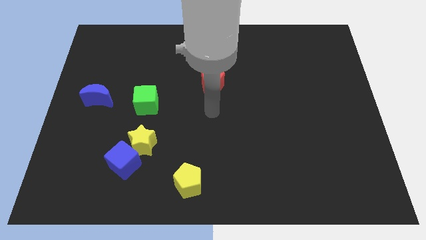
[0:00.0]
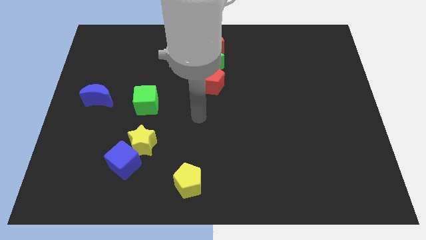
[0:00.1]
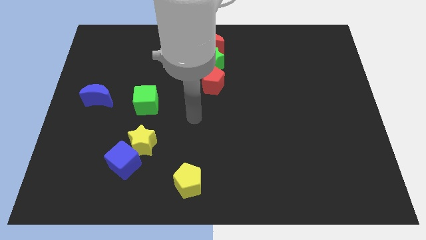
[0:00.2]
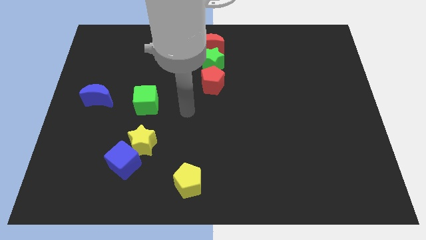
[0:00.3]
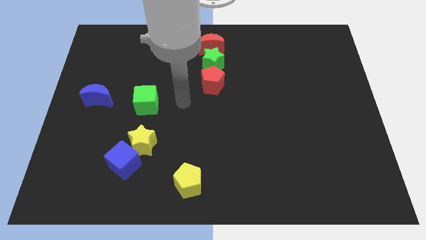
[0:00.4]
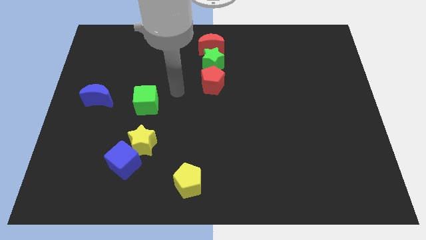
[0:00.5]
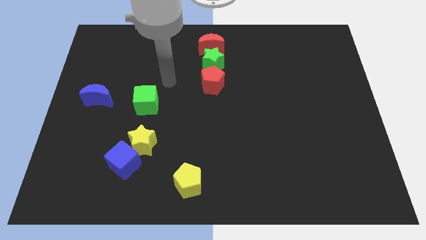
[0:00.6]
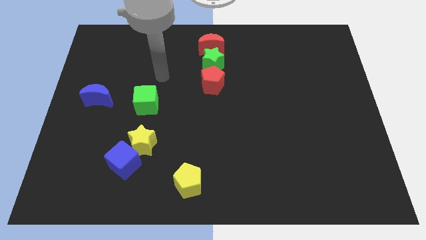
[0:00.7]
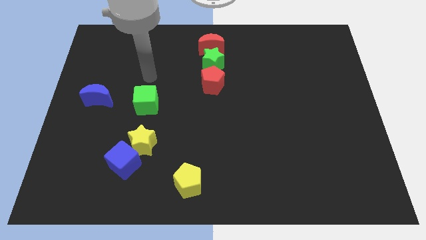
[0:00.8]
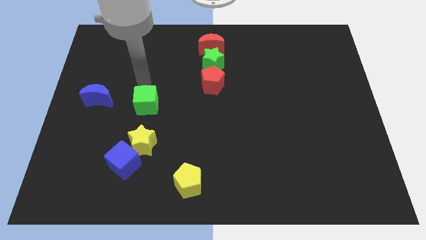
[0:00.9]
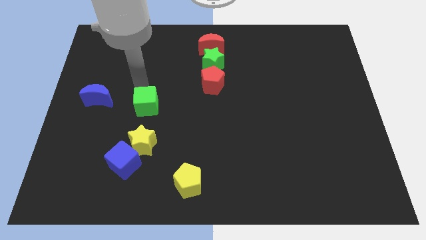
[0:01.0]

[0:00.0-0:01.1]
point your arm at the top of the green cube

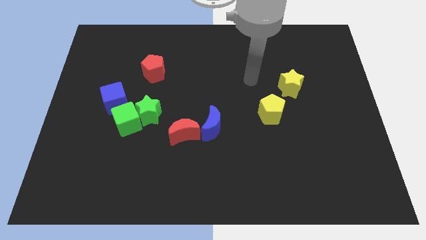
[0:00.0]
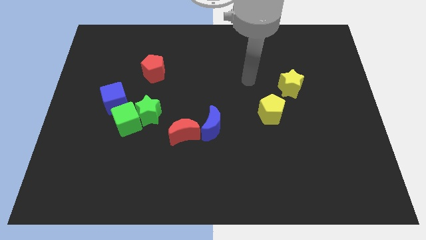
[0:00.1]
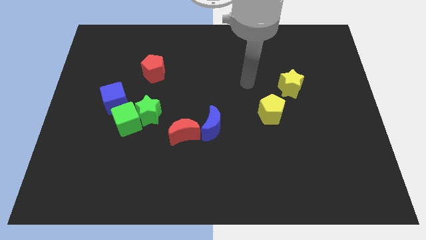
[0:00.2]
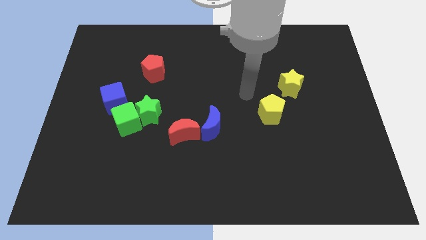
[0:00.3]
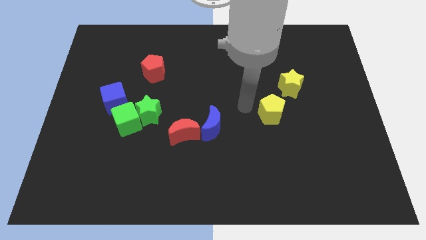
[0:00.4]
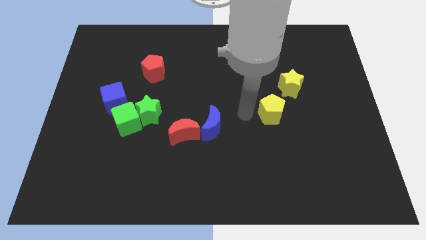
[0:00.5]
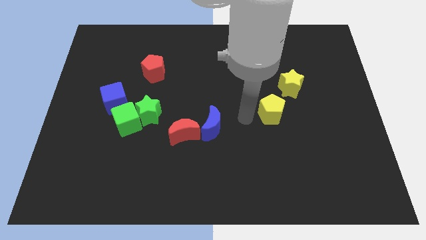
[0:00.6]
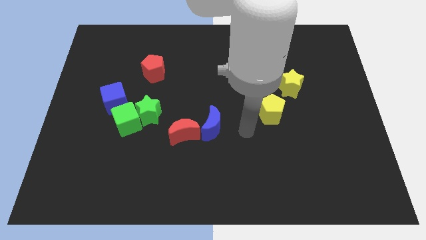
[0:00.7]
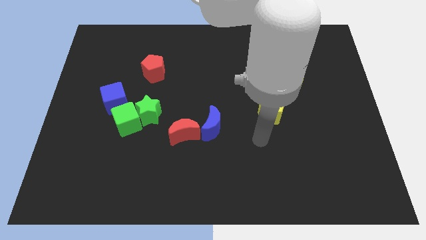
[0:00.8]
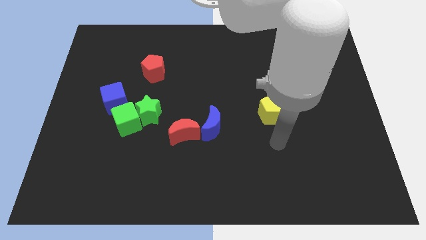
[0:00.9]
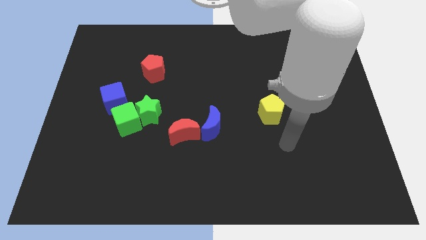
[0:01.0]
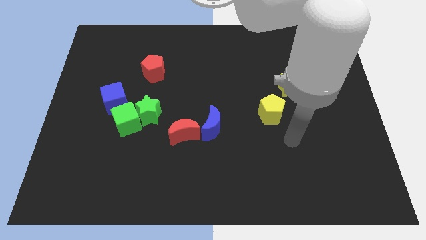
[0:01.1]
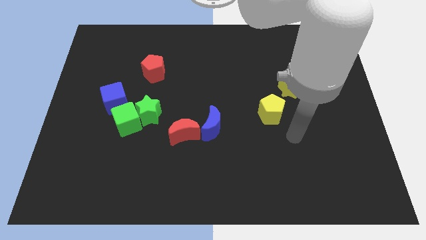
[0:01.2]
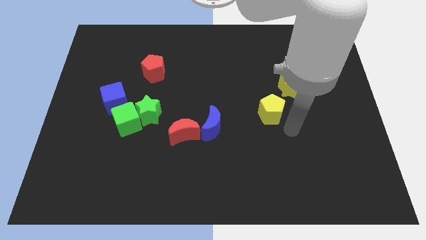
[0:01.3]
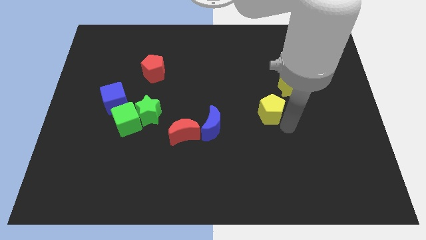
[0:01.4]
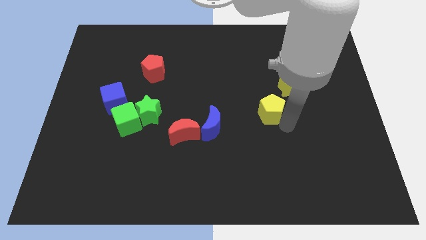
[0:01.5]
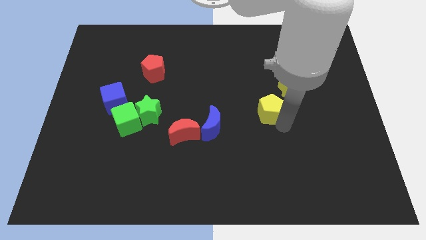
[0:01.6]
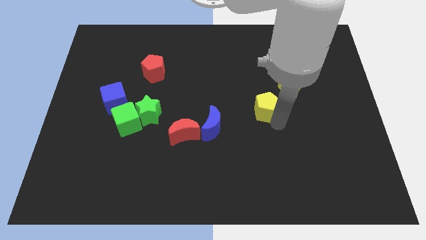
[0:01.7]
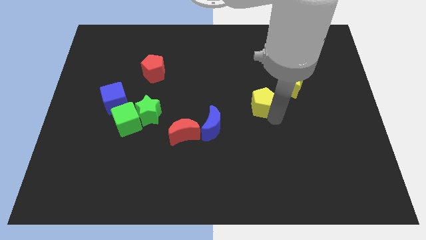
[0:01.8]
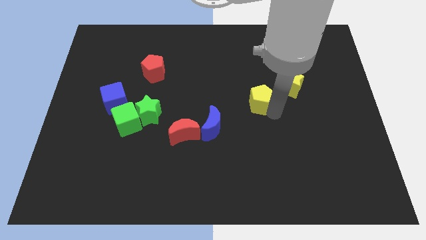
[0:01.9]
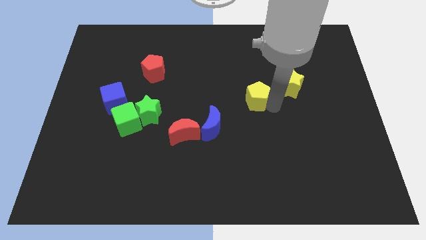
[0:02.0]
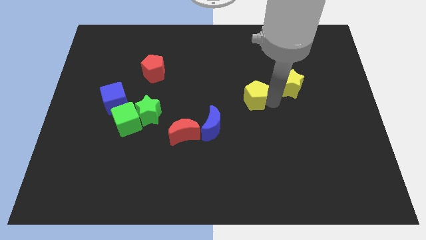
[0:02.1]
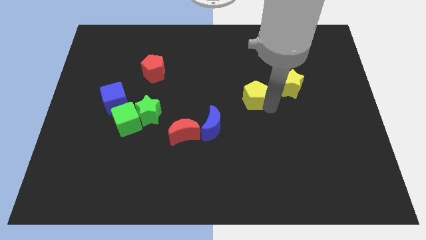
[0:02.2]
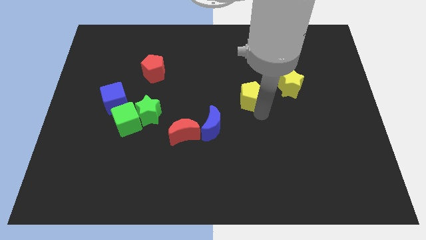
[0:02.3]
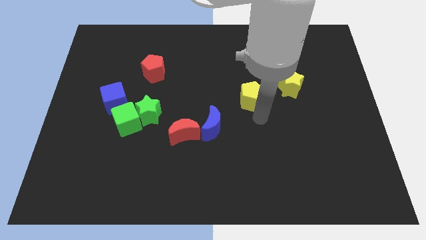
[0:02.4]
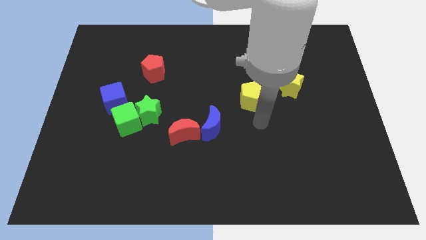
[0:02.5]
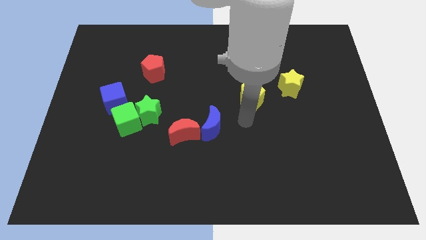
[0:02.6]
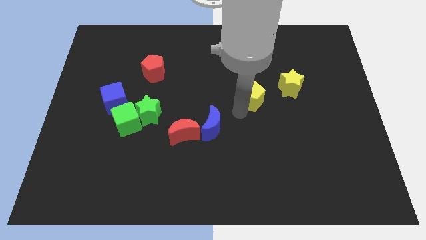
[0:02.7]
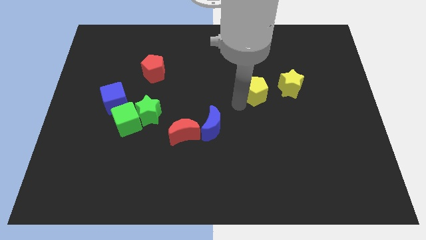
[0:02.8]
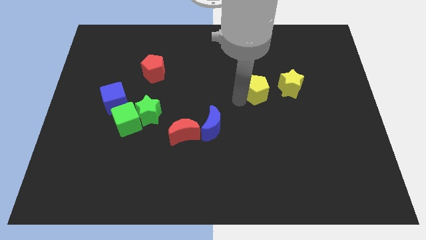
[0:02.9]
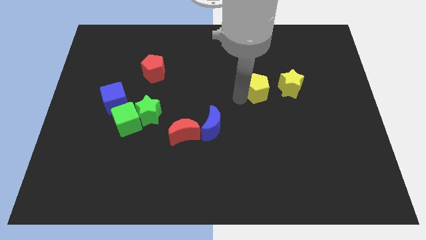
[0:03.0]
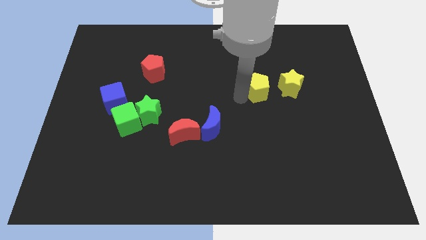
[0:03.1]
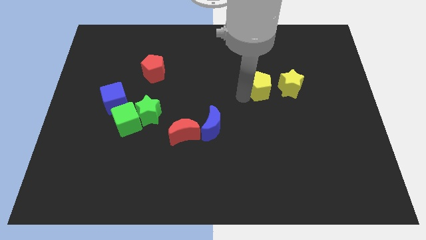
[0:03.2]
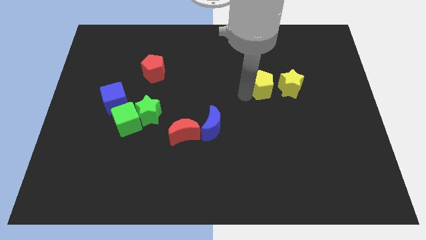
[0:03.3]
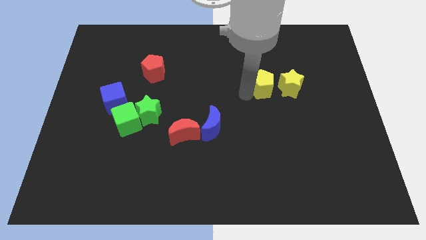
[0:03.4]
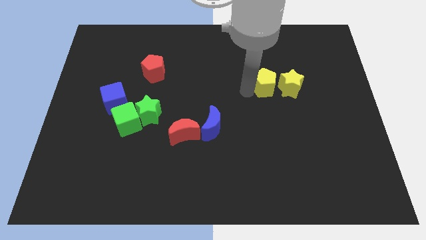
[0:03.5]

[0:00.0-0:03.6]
place yellow pentagon to the left of yellow star

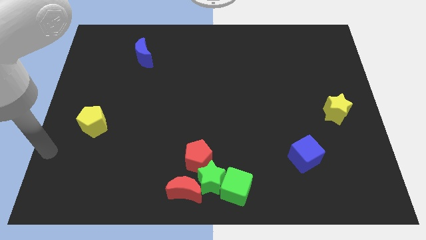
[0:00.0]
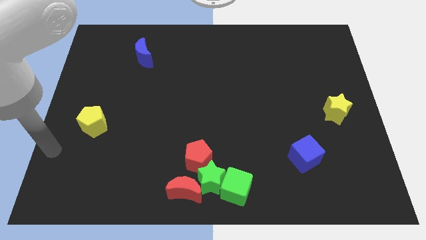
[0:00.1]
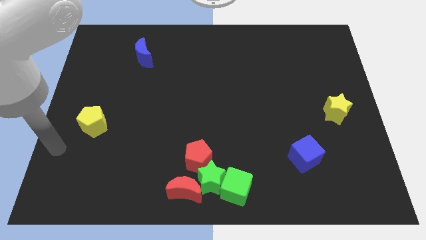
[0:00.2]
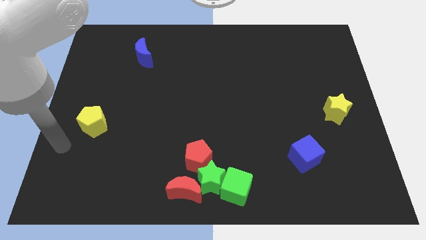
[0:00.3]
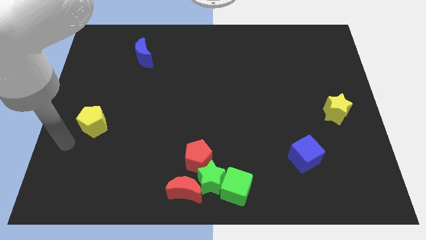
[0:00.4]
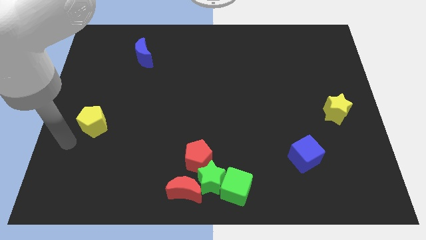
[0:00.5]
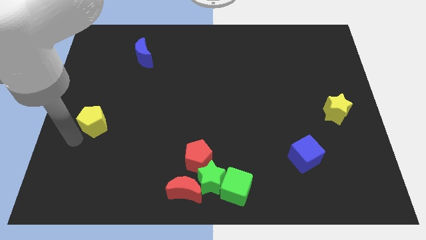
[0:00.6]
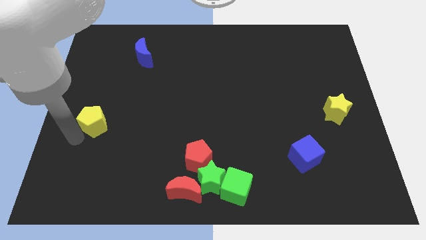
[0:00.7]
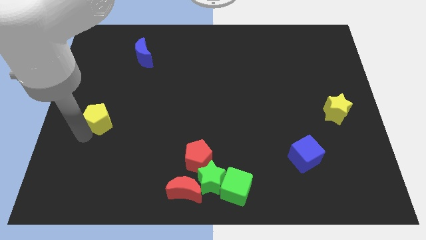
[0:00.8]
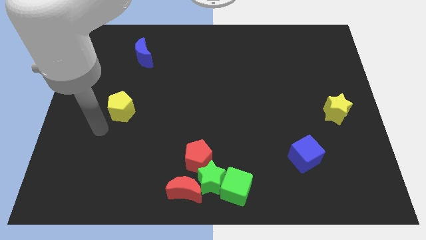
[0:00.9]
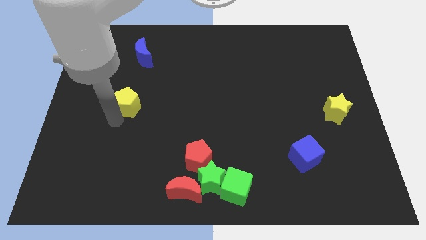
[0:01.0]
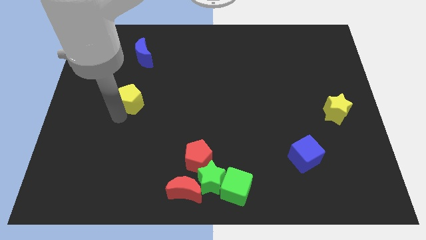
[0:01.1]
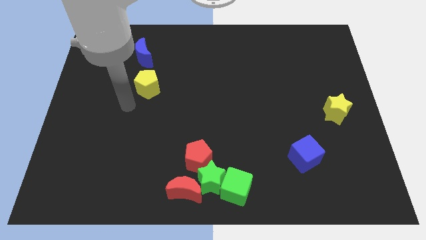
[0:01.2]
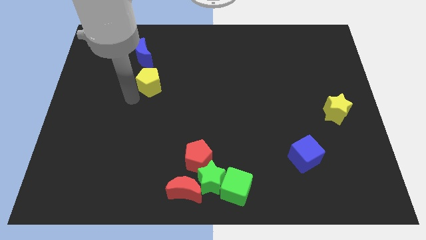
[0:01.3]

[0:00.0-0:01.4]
put the yellow pentagon below the blue moon

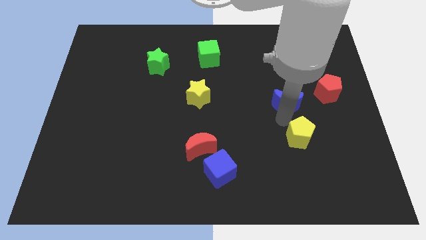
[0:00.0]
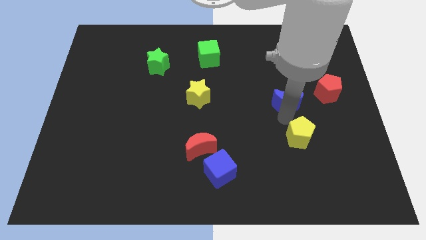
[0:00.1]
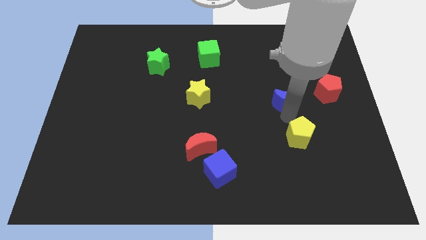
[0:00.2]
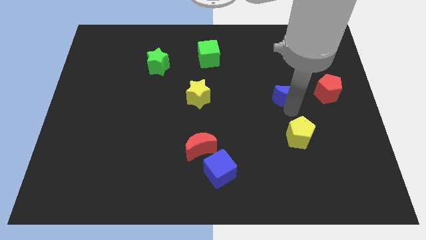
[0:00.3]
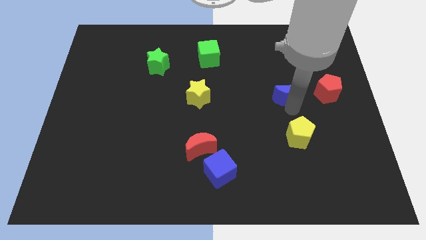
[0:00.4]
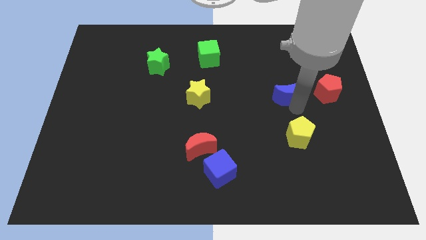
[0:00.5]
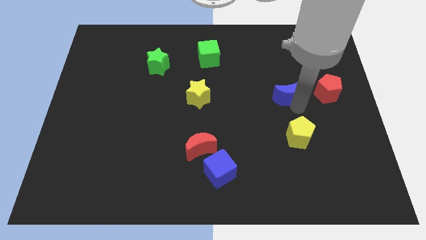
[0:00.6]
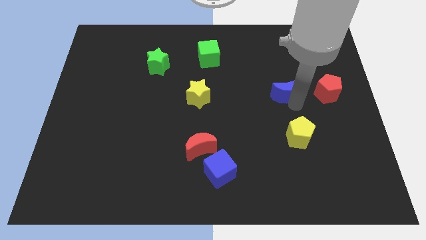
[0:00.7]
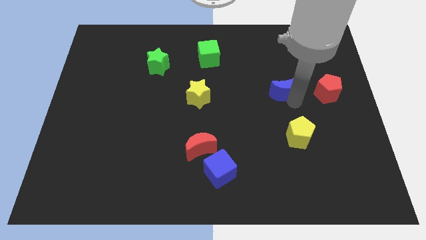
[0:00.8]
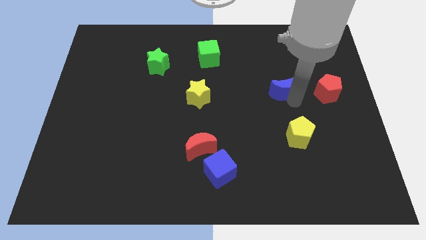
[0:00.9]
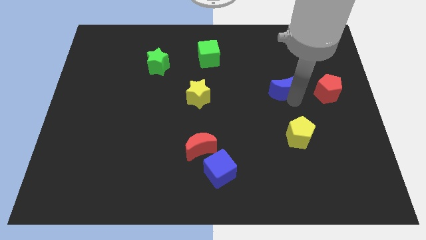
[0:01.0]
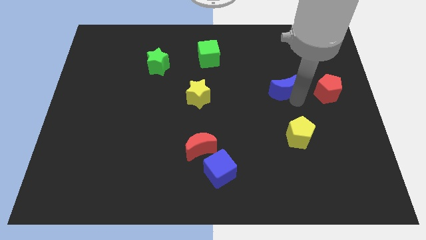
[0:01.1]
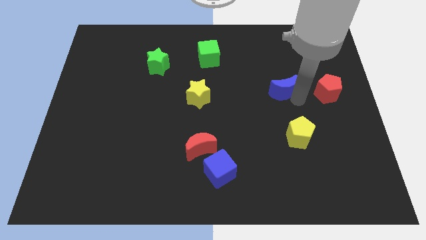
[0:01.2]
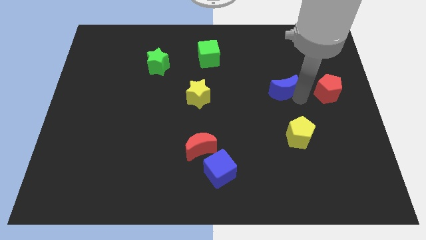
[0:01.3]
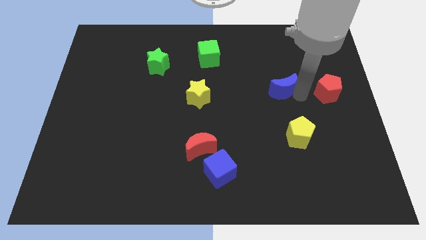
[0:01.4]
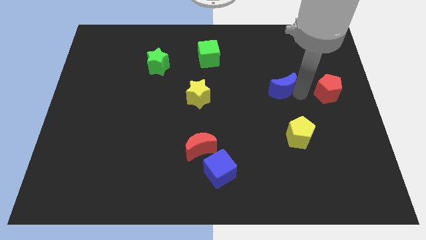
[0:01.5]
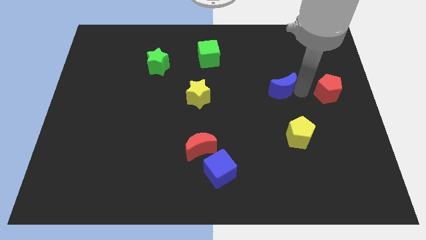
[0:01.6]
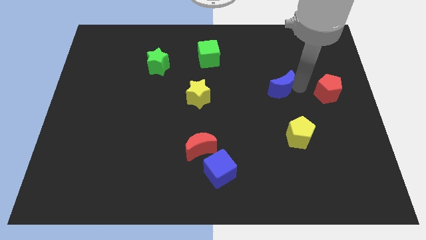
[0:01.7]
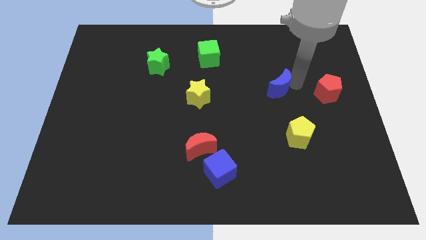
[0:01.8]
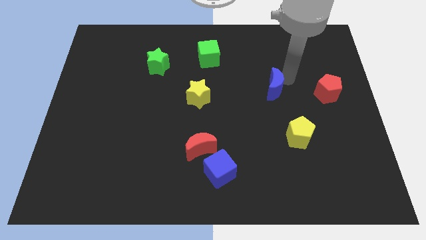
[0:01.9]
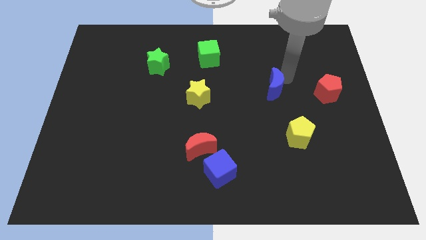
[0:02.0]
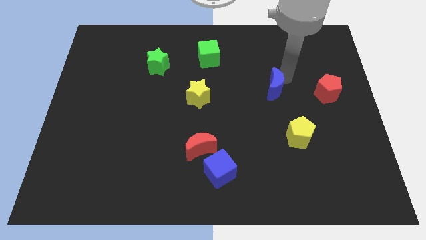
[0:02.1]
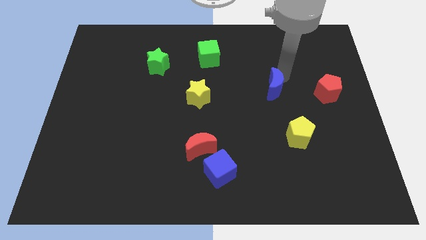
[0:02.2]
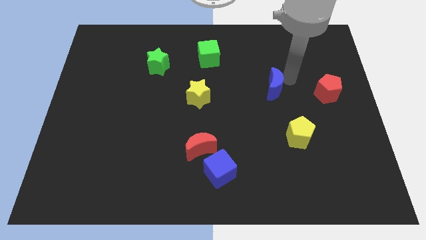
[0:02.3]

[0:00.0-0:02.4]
place the blue moon left to the red pentagon

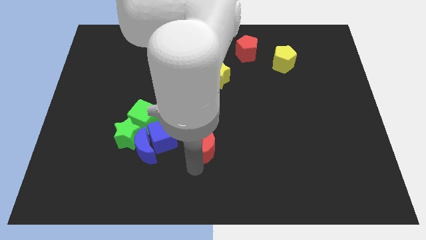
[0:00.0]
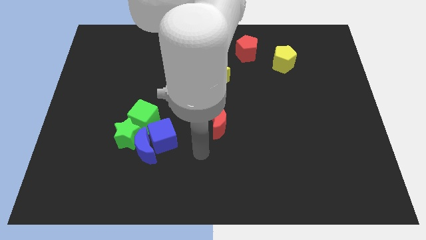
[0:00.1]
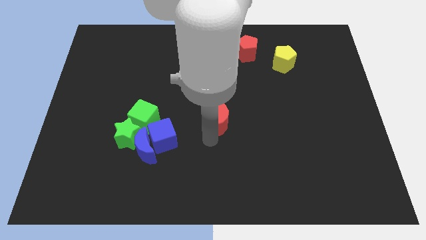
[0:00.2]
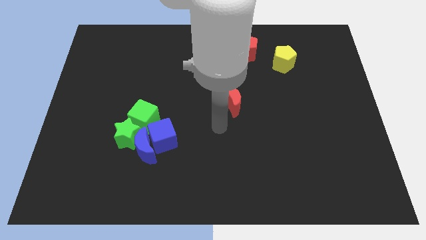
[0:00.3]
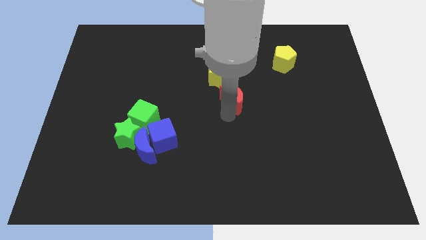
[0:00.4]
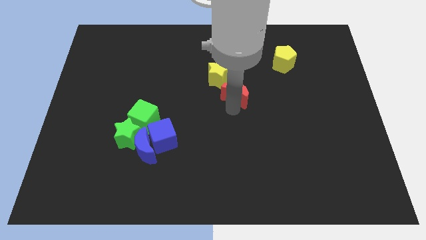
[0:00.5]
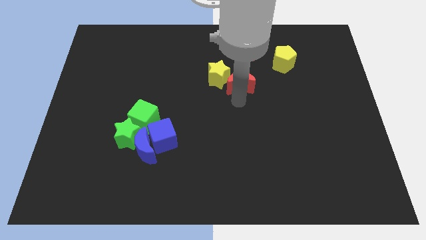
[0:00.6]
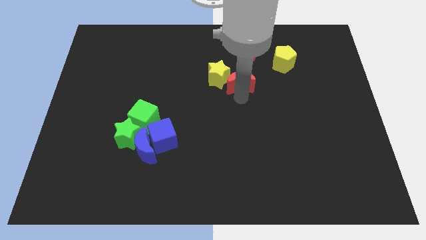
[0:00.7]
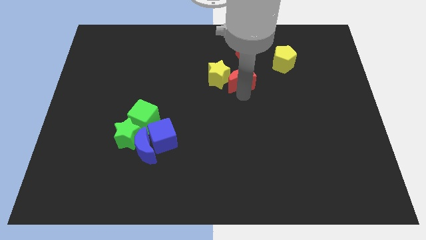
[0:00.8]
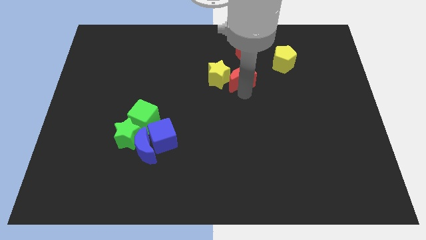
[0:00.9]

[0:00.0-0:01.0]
push the red moon to the right of the yellow star
